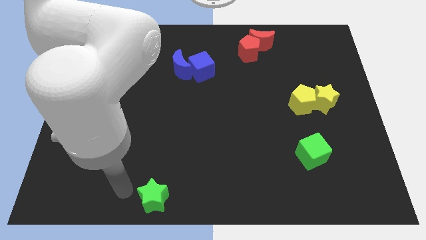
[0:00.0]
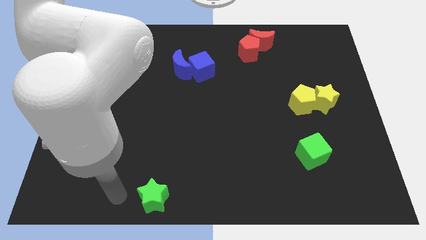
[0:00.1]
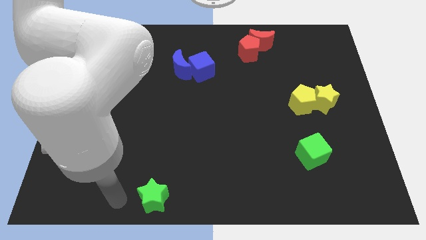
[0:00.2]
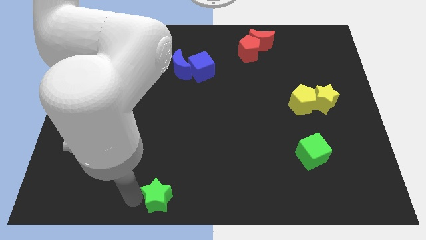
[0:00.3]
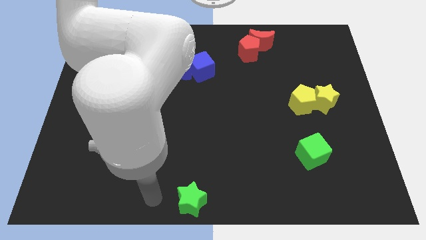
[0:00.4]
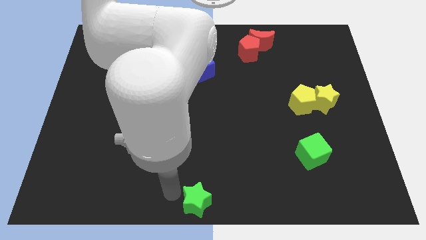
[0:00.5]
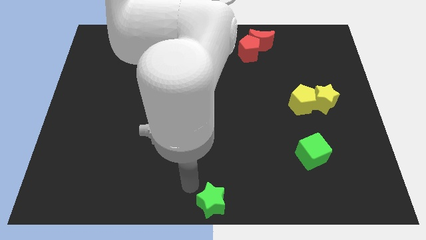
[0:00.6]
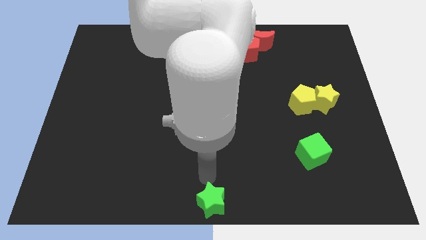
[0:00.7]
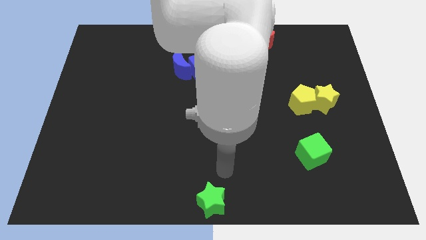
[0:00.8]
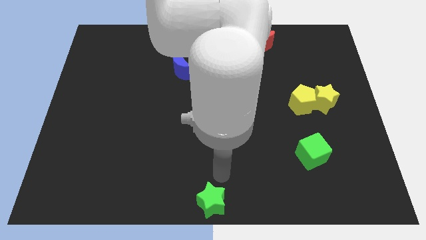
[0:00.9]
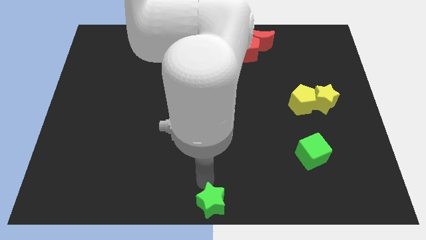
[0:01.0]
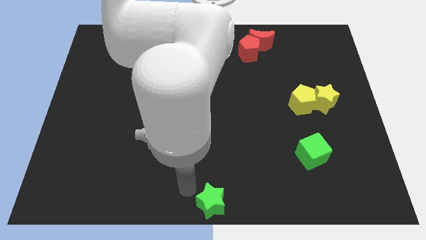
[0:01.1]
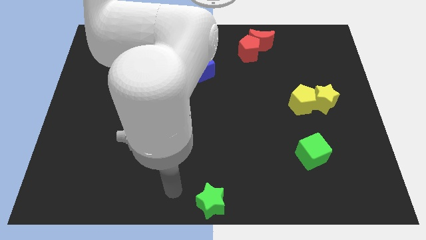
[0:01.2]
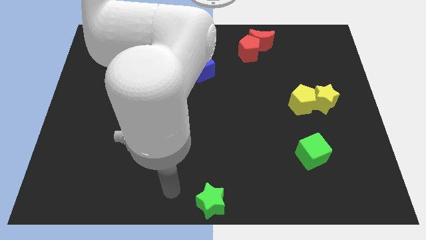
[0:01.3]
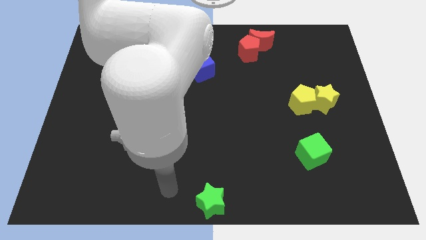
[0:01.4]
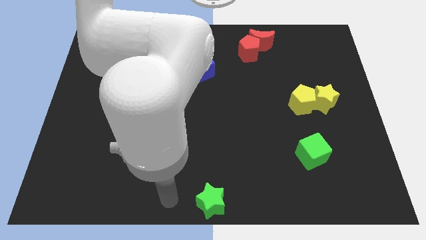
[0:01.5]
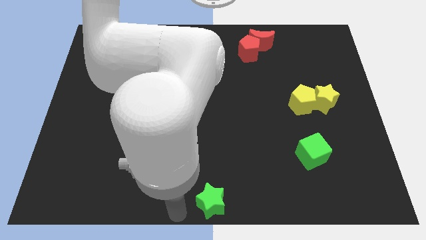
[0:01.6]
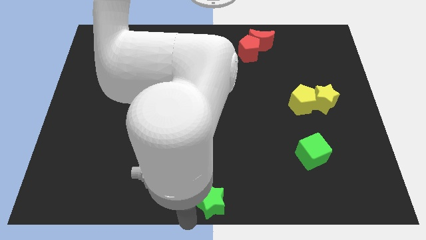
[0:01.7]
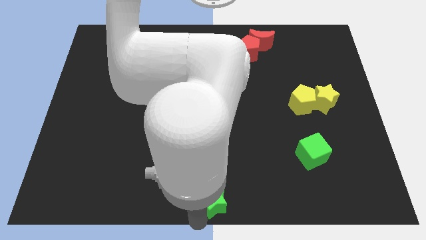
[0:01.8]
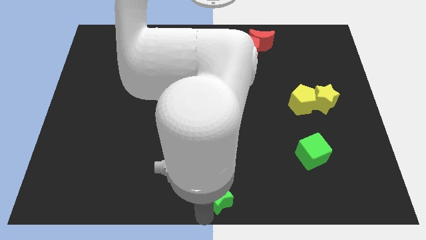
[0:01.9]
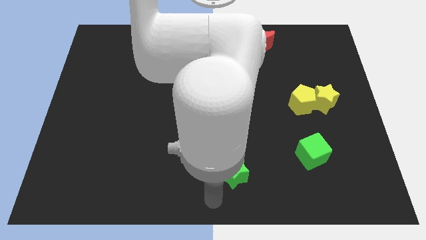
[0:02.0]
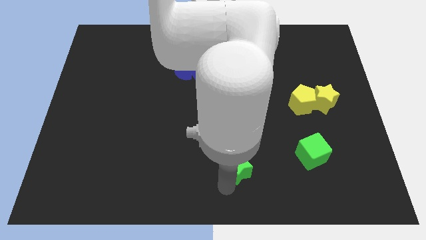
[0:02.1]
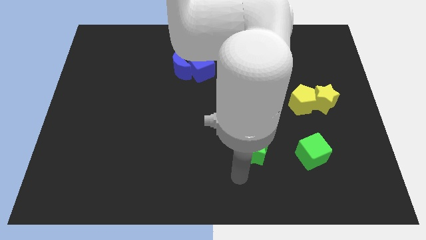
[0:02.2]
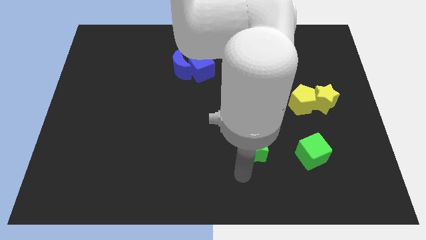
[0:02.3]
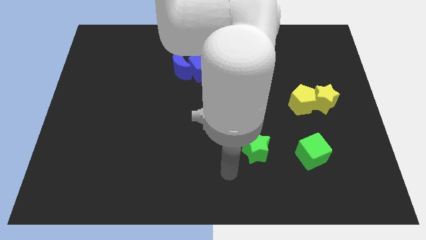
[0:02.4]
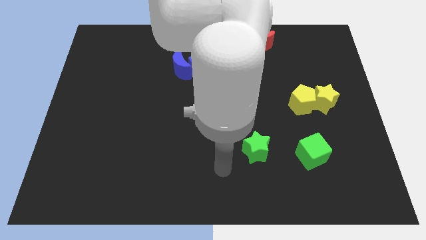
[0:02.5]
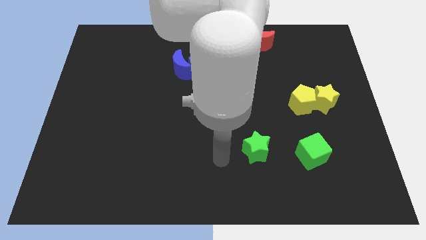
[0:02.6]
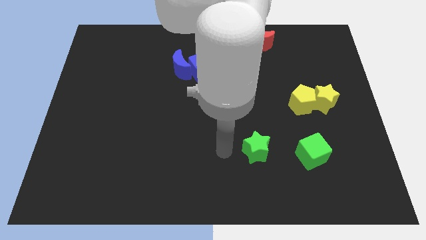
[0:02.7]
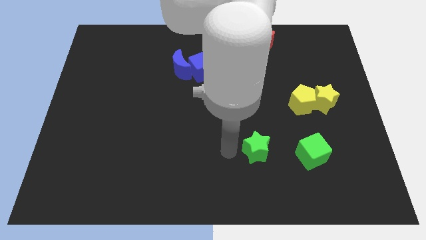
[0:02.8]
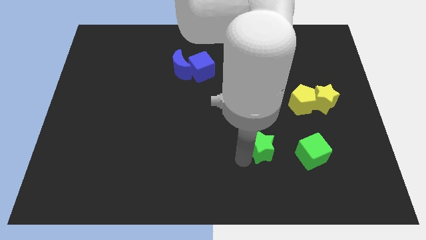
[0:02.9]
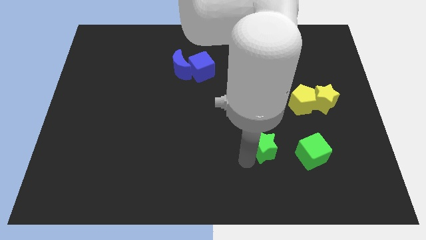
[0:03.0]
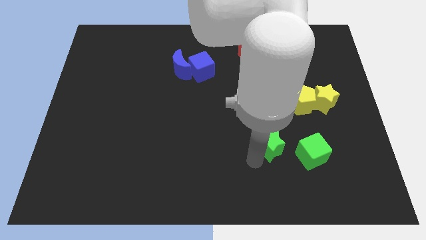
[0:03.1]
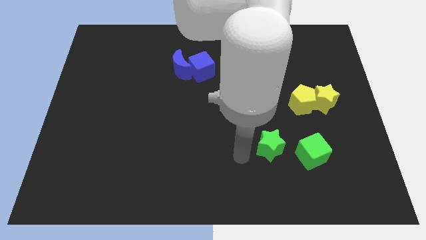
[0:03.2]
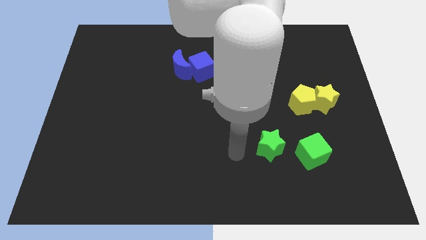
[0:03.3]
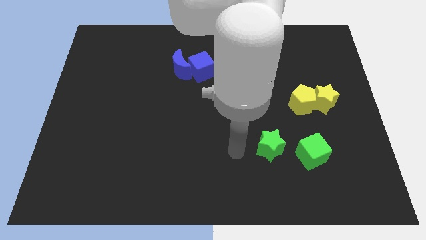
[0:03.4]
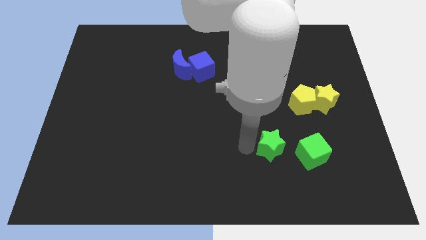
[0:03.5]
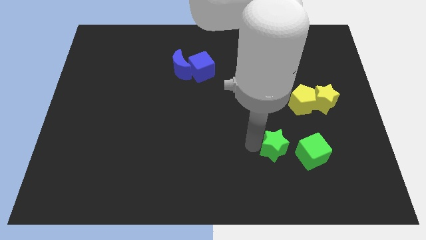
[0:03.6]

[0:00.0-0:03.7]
put the green star left to the green cube

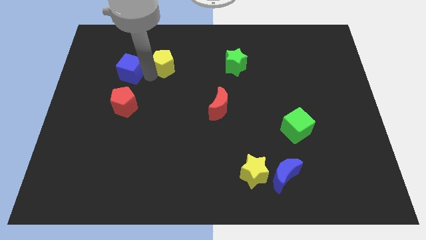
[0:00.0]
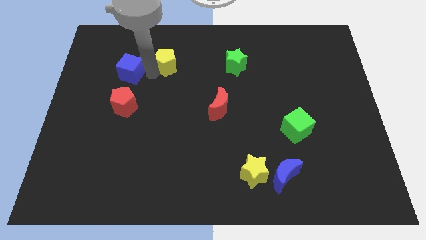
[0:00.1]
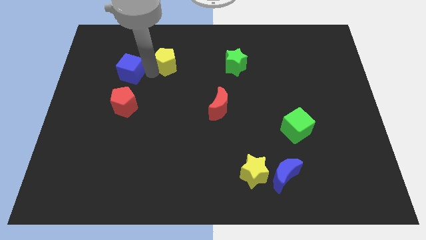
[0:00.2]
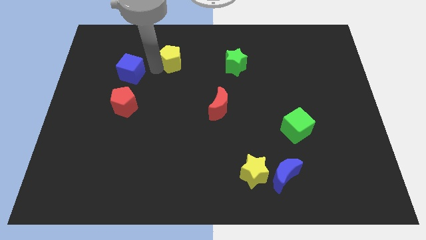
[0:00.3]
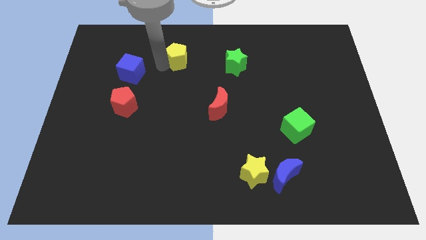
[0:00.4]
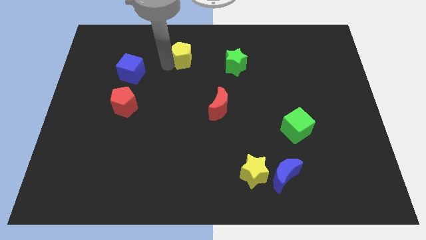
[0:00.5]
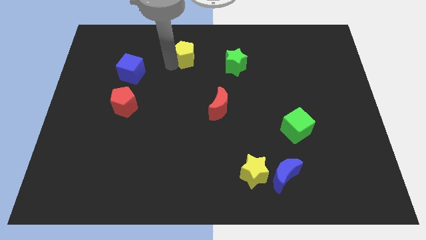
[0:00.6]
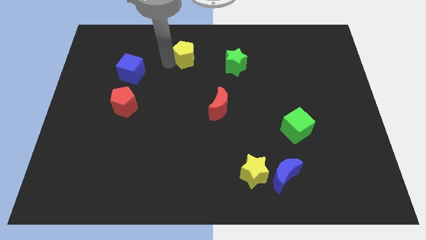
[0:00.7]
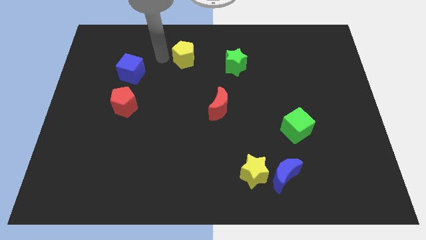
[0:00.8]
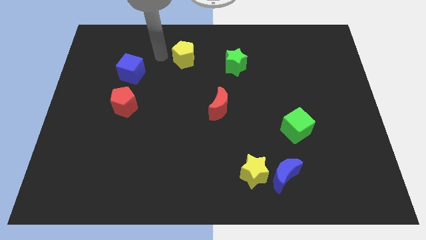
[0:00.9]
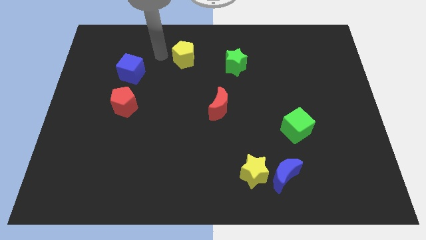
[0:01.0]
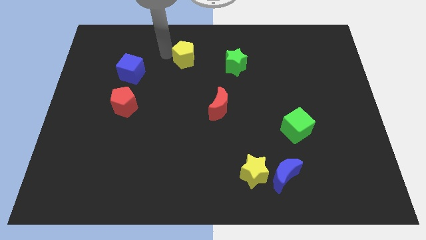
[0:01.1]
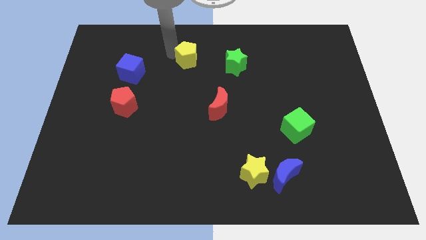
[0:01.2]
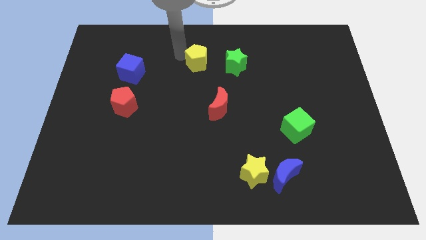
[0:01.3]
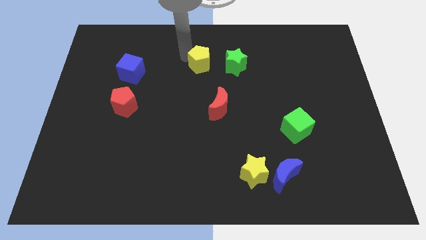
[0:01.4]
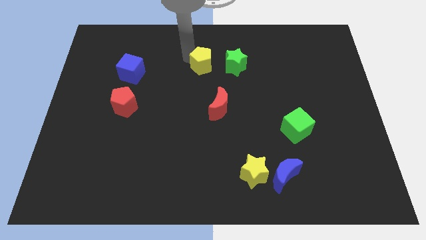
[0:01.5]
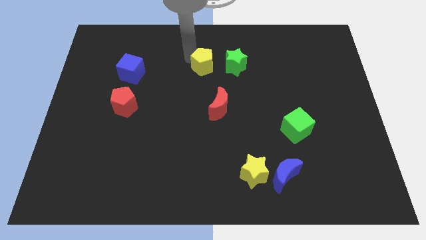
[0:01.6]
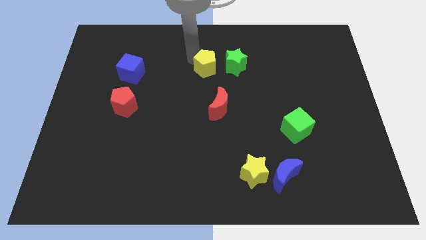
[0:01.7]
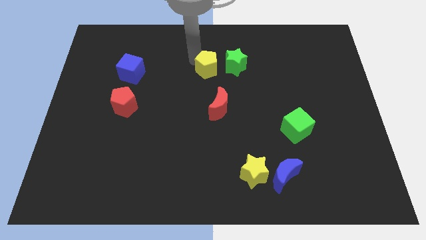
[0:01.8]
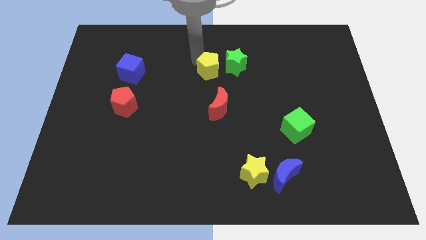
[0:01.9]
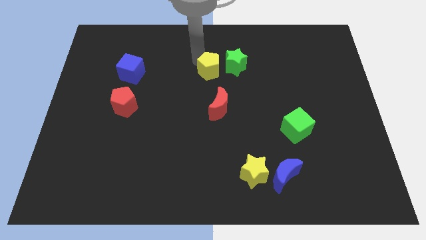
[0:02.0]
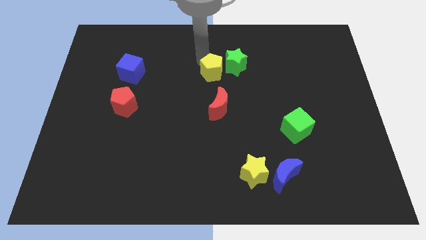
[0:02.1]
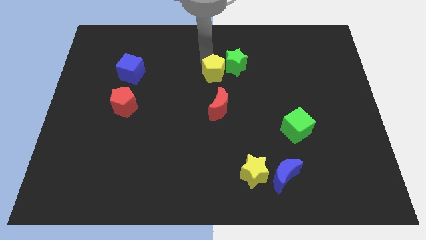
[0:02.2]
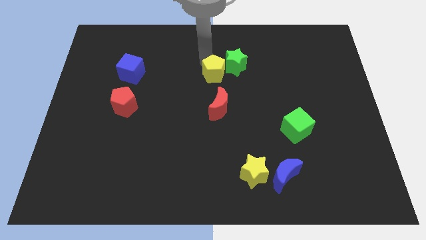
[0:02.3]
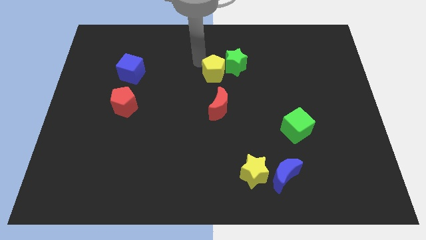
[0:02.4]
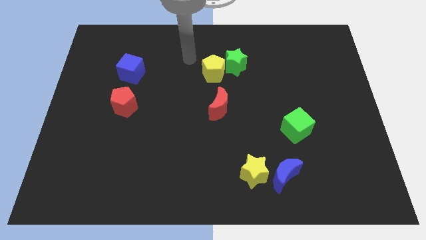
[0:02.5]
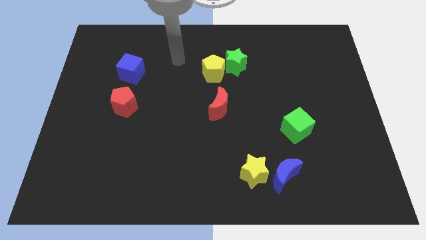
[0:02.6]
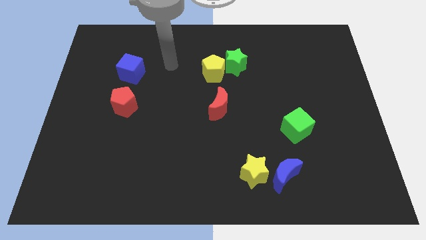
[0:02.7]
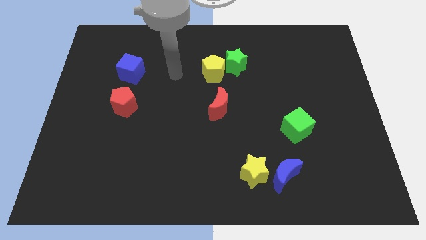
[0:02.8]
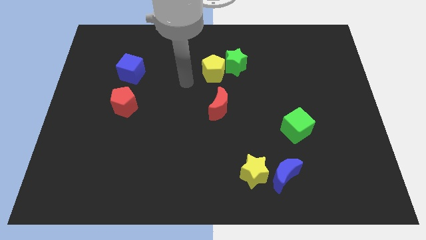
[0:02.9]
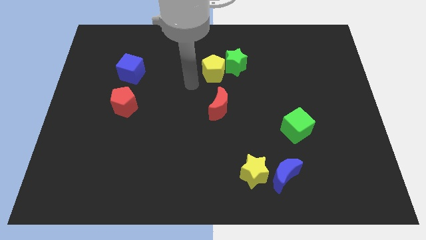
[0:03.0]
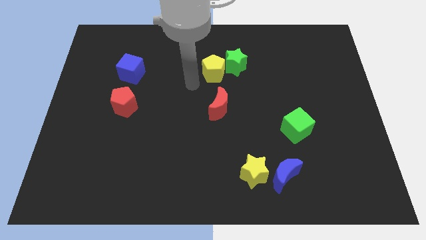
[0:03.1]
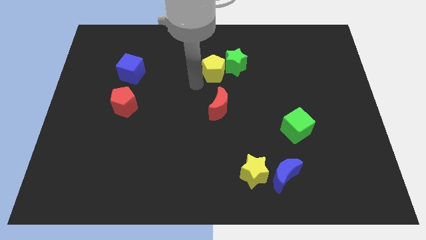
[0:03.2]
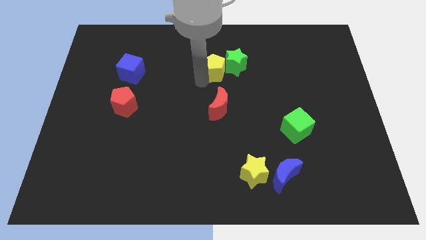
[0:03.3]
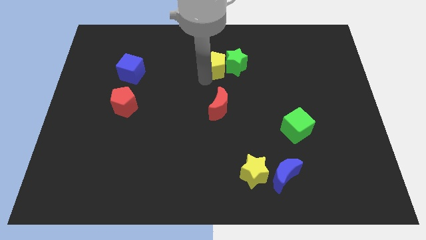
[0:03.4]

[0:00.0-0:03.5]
move yellow pentagon vertically above red crescent

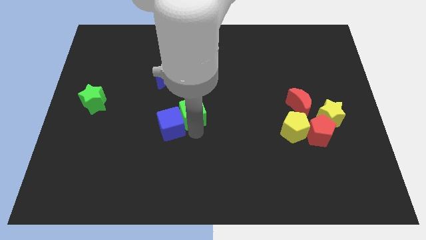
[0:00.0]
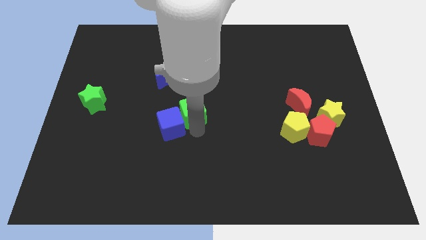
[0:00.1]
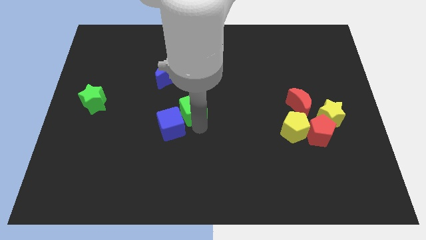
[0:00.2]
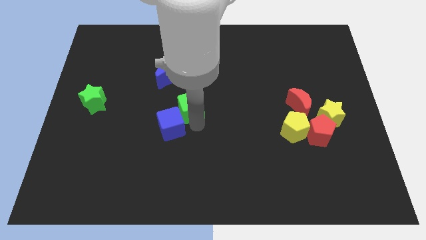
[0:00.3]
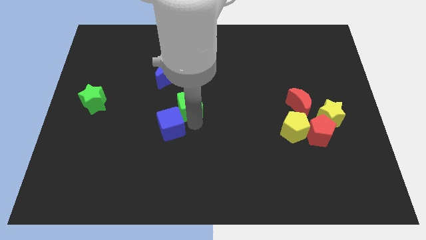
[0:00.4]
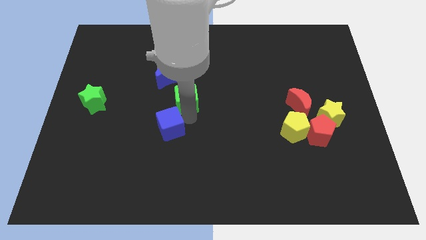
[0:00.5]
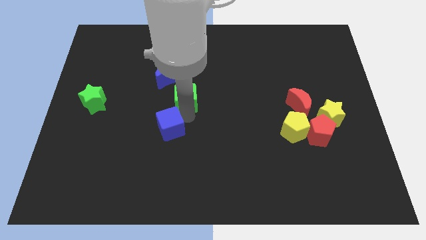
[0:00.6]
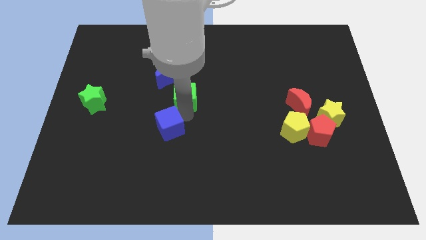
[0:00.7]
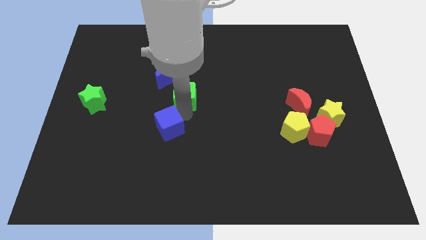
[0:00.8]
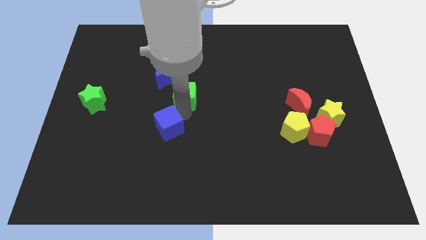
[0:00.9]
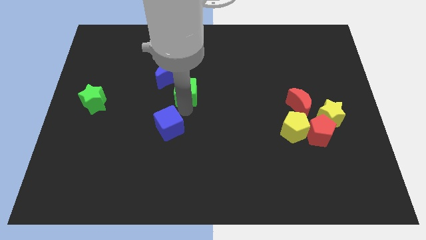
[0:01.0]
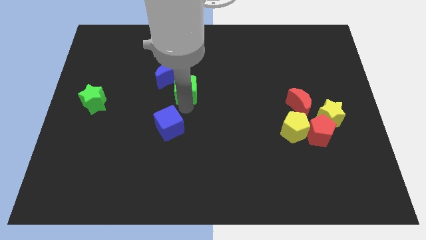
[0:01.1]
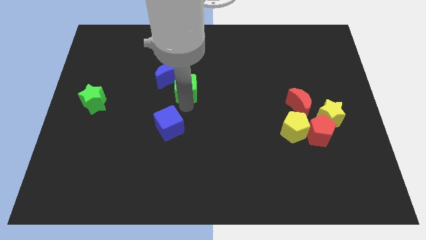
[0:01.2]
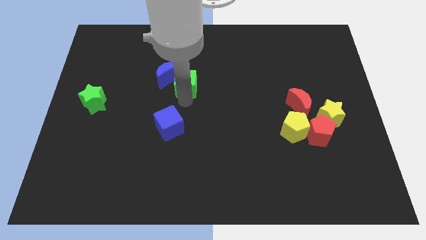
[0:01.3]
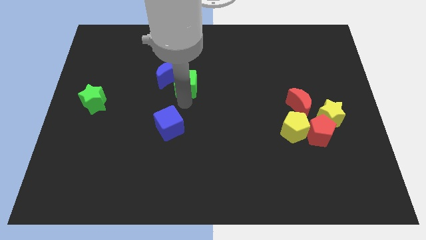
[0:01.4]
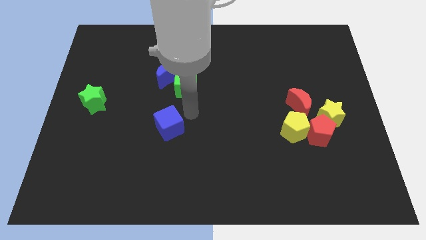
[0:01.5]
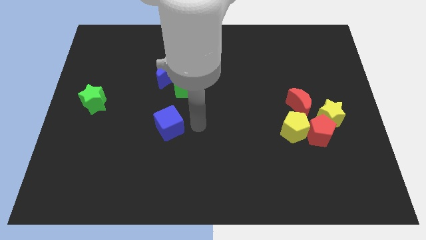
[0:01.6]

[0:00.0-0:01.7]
move the green cube to the right side of the blue crescent on the board

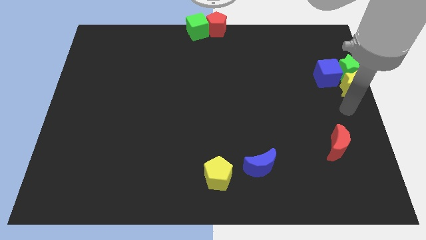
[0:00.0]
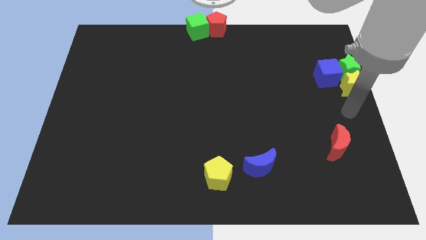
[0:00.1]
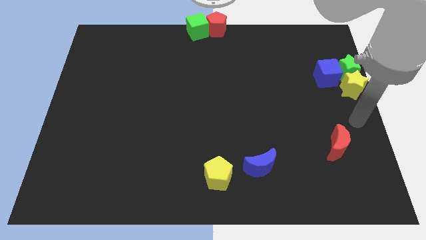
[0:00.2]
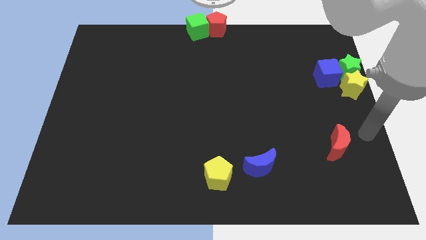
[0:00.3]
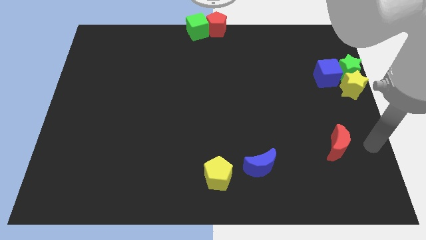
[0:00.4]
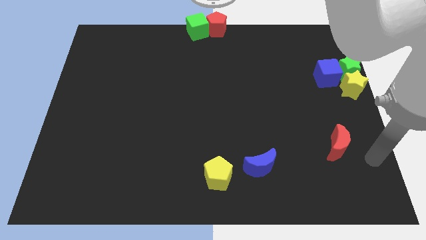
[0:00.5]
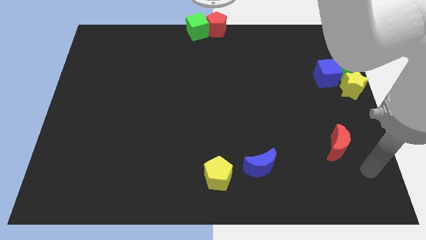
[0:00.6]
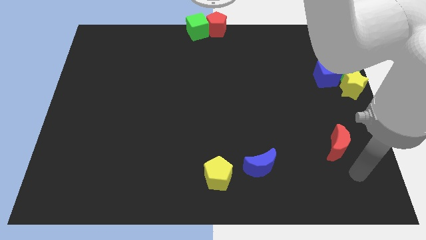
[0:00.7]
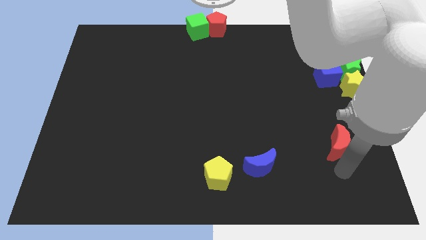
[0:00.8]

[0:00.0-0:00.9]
point your arm at the bottom of the red crescent
